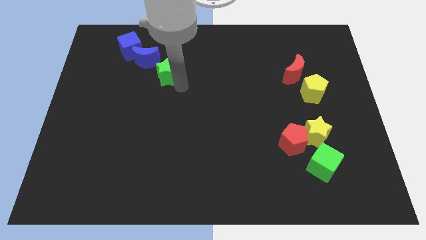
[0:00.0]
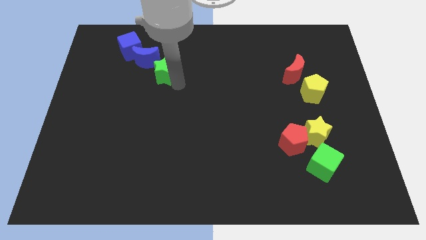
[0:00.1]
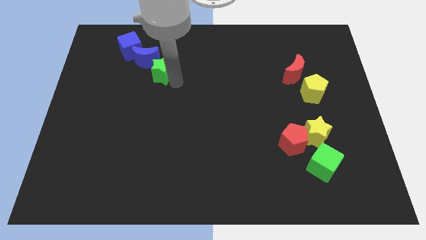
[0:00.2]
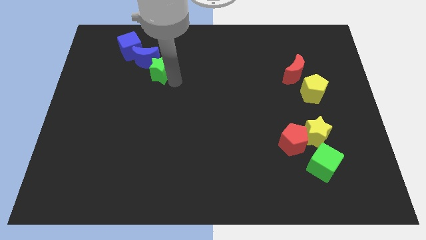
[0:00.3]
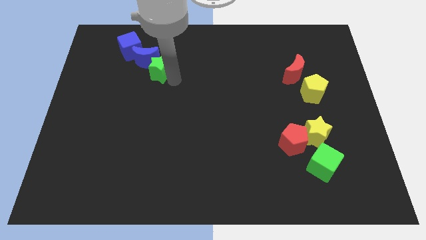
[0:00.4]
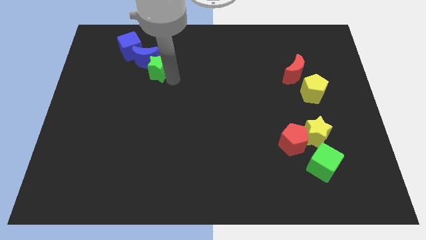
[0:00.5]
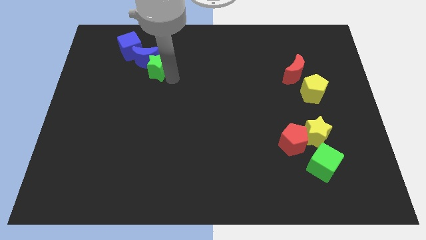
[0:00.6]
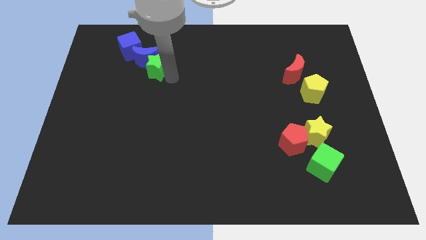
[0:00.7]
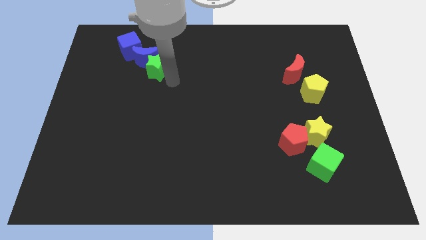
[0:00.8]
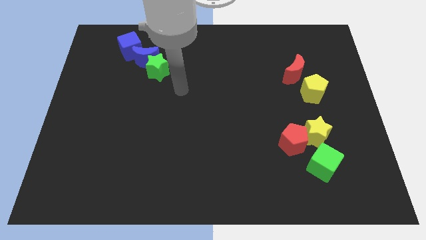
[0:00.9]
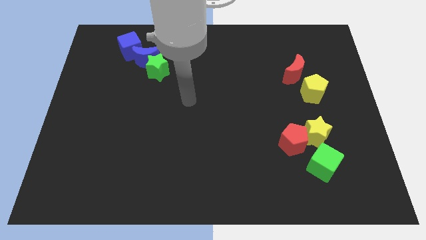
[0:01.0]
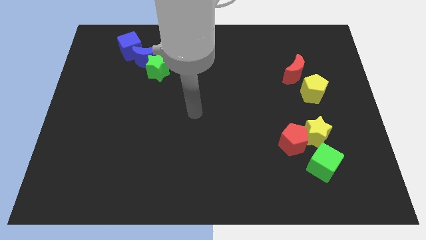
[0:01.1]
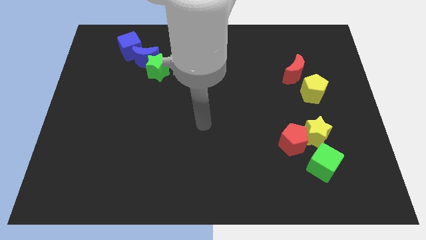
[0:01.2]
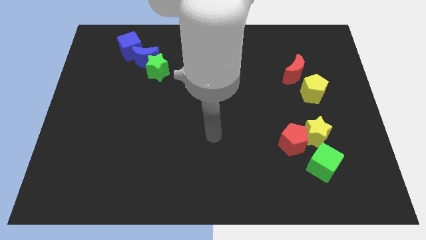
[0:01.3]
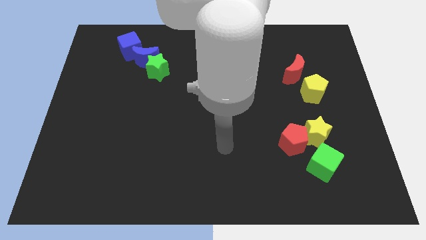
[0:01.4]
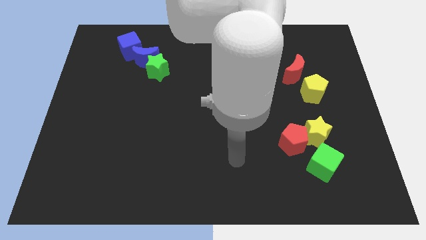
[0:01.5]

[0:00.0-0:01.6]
put green star into the blue moon

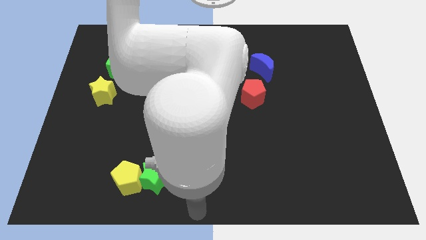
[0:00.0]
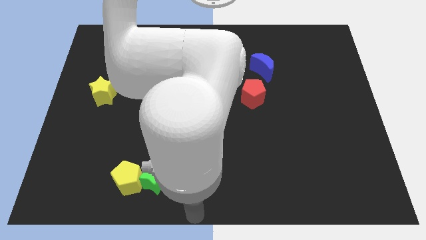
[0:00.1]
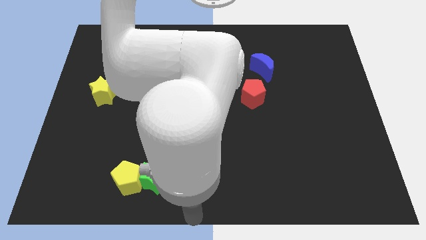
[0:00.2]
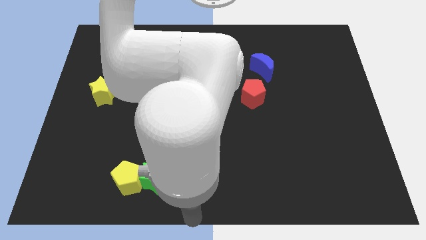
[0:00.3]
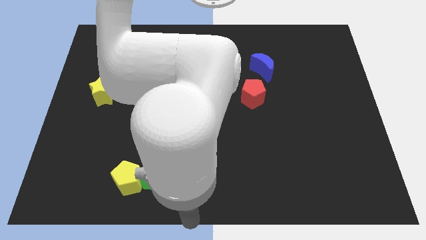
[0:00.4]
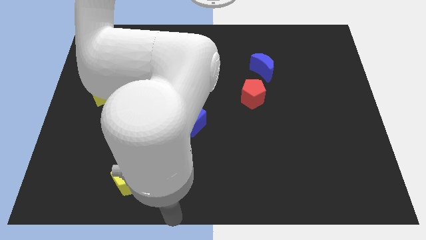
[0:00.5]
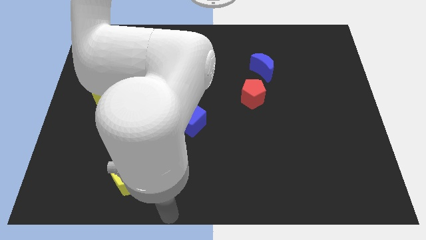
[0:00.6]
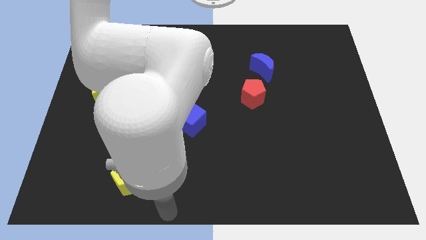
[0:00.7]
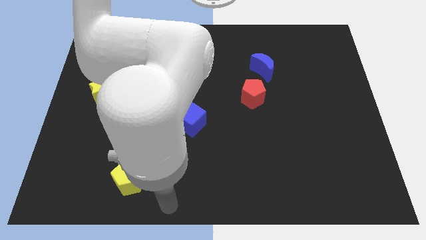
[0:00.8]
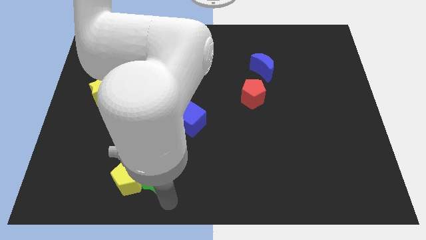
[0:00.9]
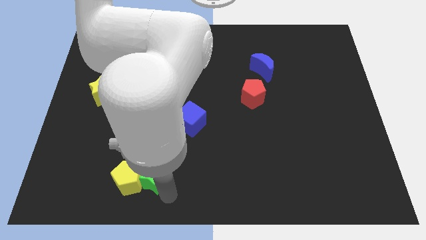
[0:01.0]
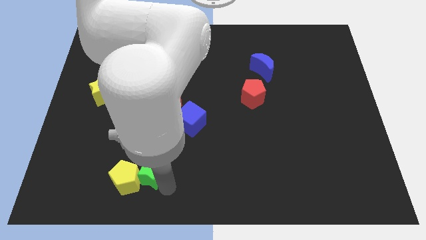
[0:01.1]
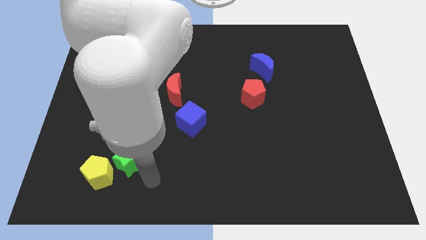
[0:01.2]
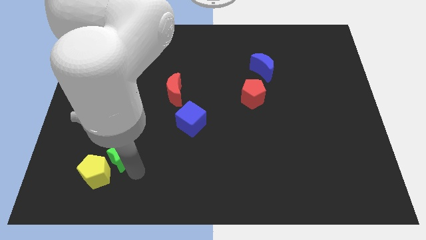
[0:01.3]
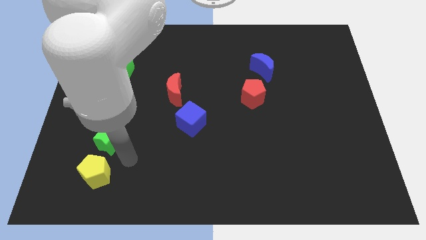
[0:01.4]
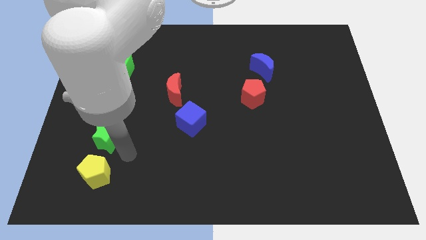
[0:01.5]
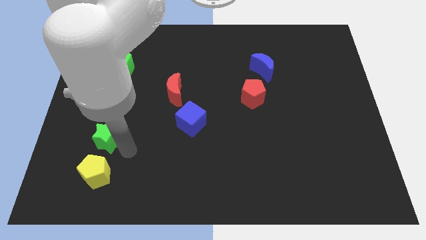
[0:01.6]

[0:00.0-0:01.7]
separate green star from the yellow pentagon

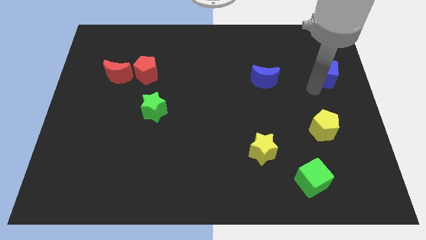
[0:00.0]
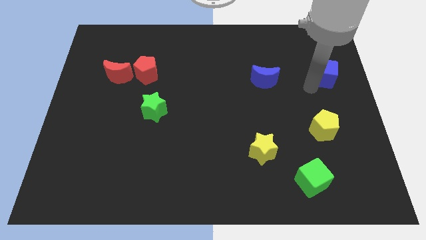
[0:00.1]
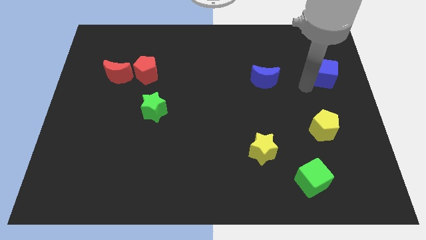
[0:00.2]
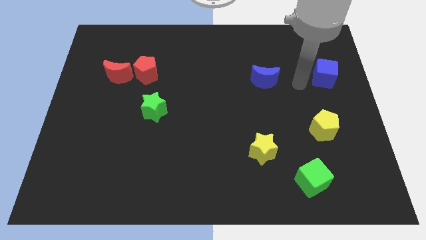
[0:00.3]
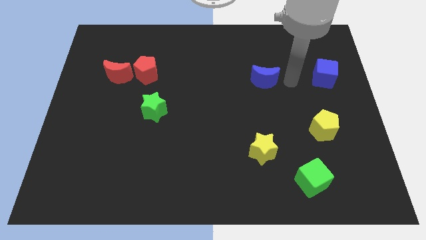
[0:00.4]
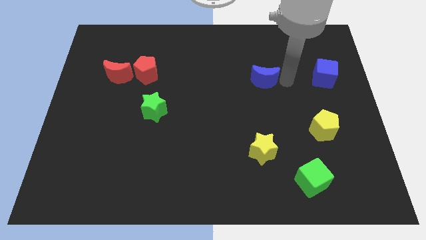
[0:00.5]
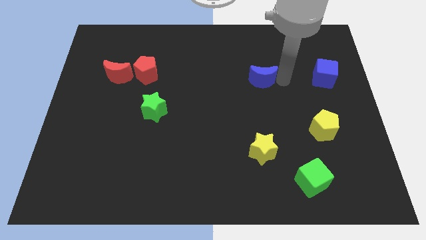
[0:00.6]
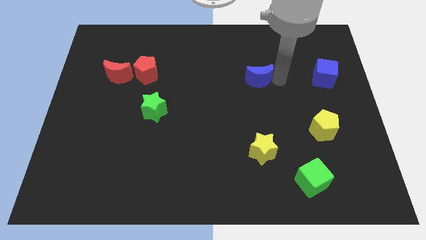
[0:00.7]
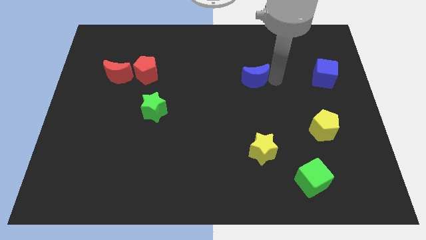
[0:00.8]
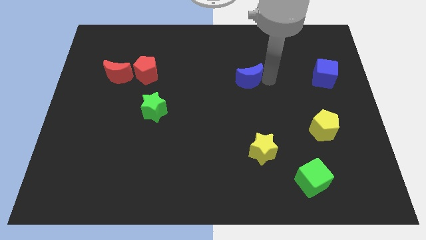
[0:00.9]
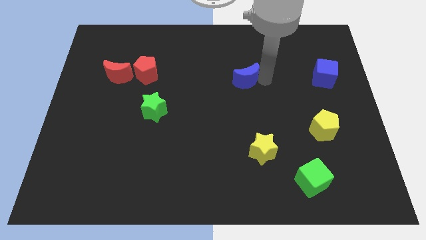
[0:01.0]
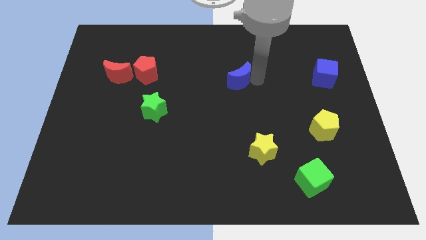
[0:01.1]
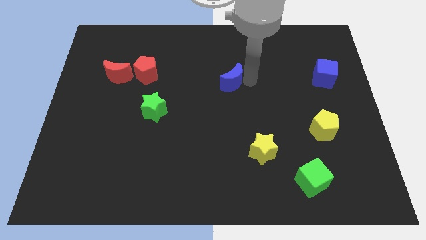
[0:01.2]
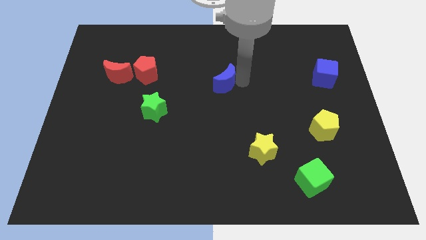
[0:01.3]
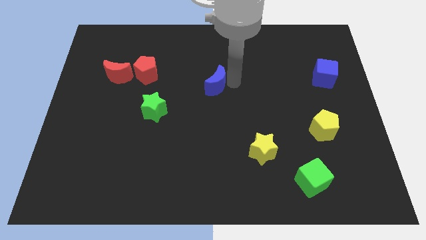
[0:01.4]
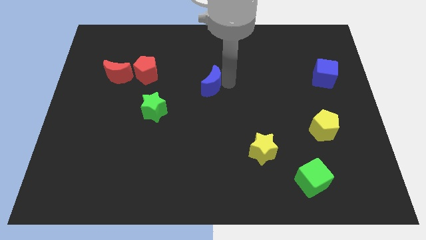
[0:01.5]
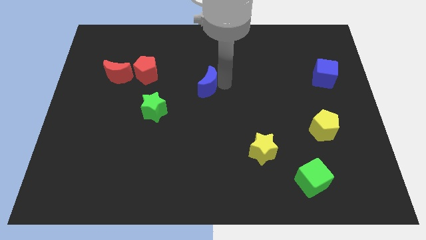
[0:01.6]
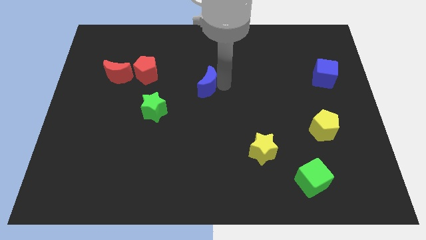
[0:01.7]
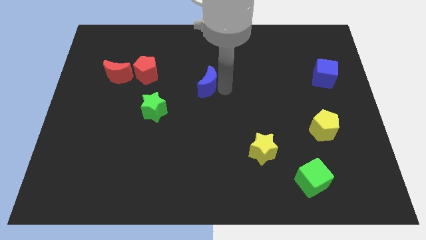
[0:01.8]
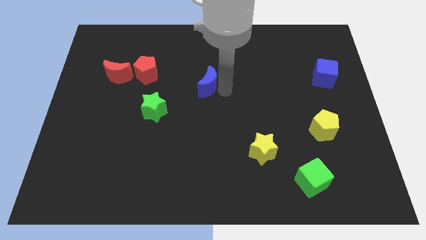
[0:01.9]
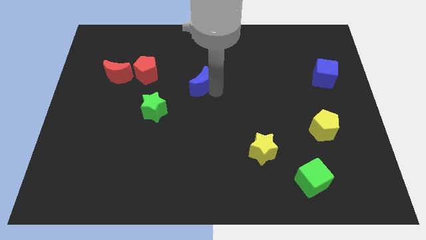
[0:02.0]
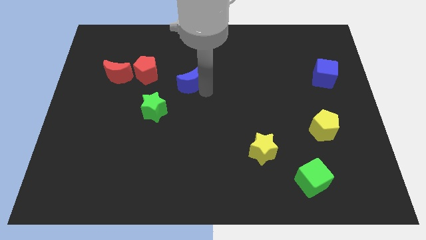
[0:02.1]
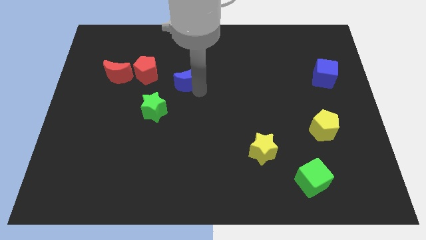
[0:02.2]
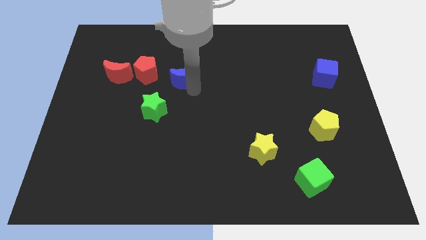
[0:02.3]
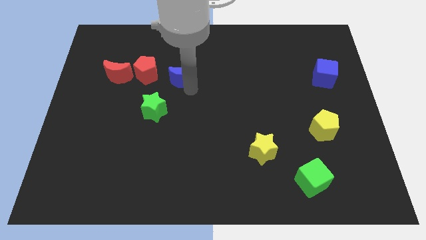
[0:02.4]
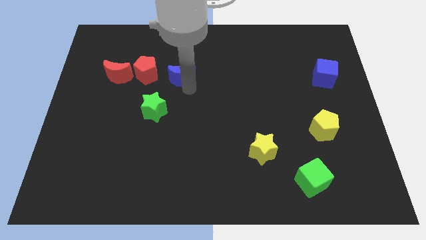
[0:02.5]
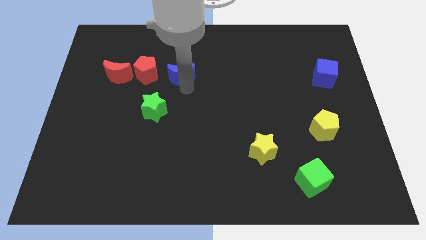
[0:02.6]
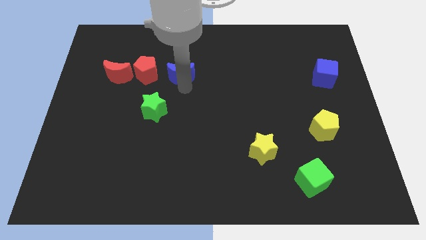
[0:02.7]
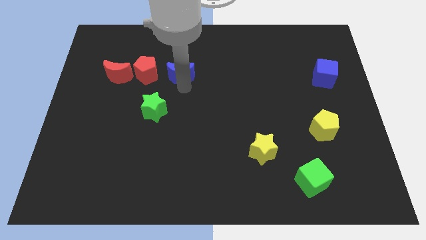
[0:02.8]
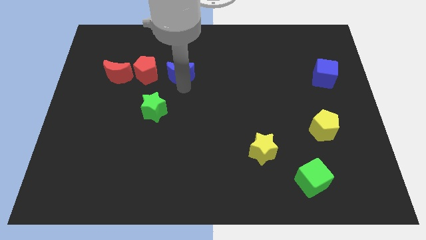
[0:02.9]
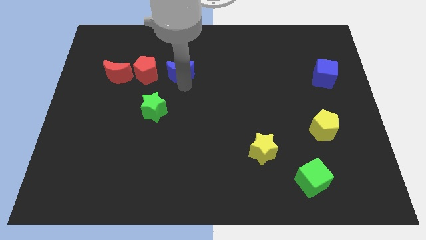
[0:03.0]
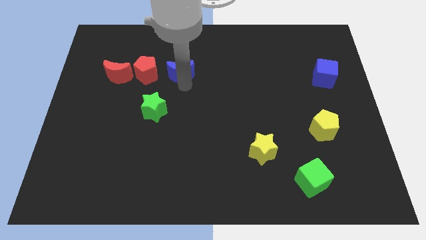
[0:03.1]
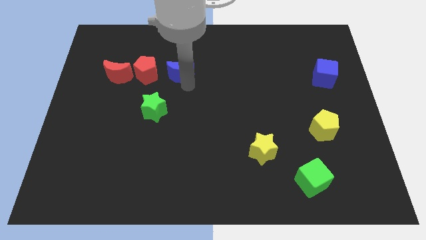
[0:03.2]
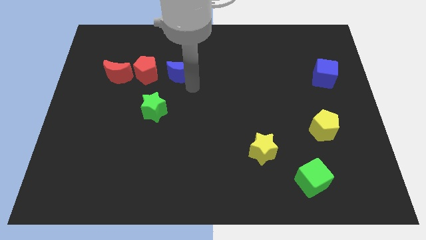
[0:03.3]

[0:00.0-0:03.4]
push the blue moon to the right of the red pentagon

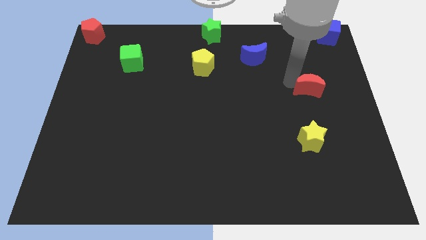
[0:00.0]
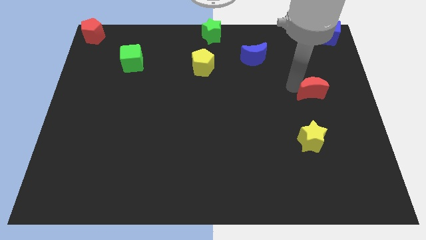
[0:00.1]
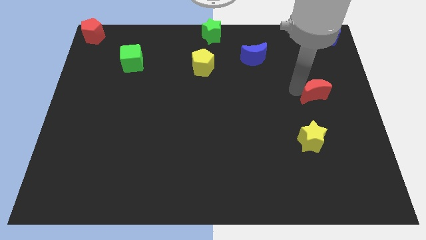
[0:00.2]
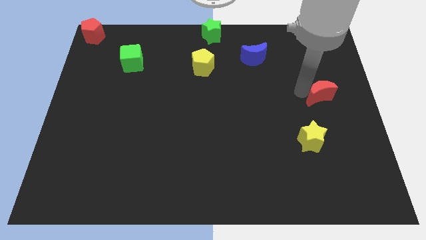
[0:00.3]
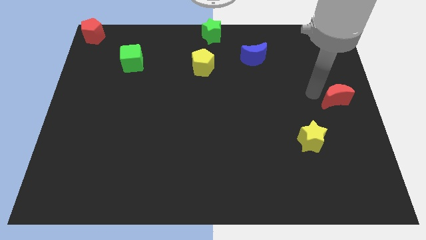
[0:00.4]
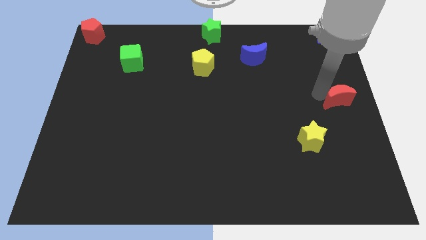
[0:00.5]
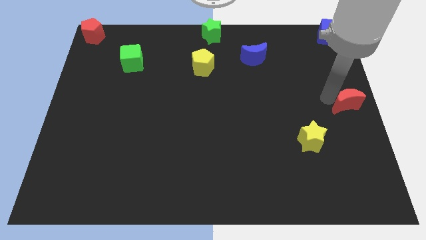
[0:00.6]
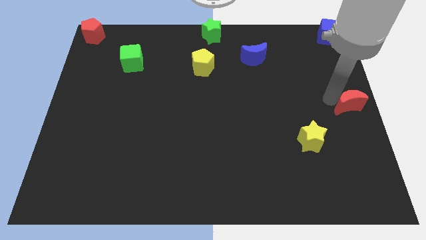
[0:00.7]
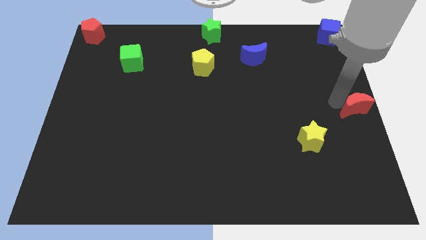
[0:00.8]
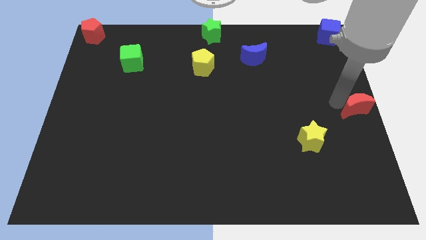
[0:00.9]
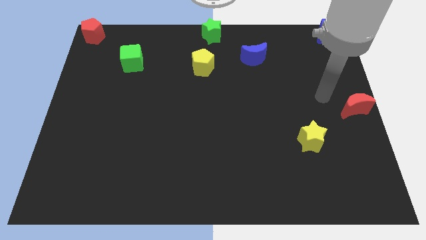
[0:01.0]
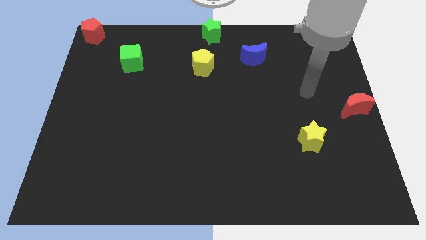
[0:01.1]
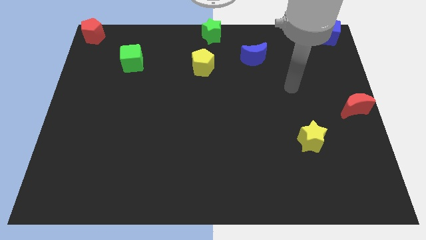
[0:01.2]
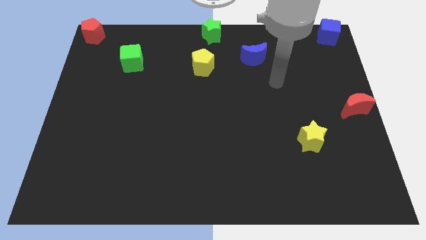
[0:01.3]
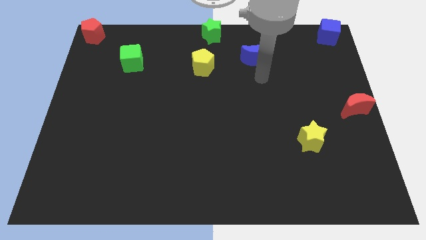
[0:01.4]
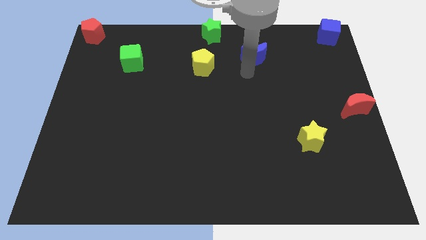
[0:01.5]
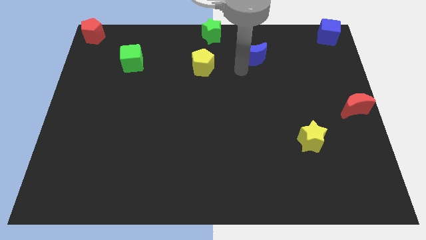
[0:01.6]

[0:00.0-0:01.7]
place the red crescent on the center right of the board

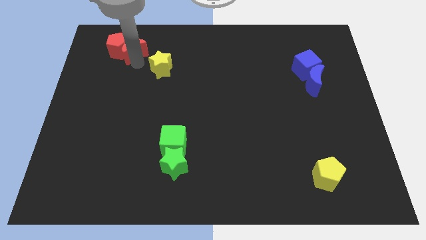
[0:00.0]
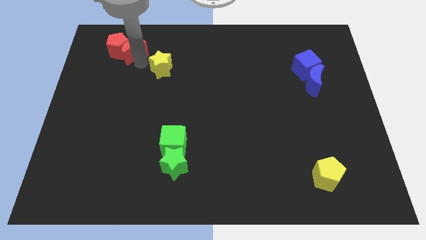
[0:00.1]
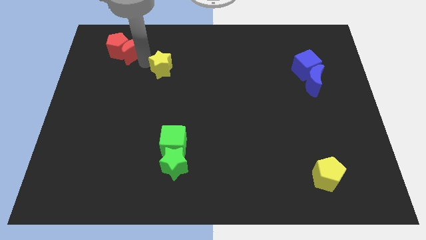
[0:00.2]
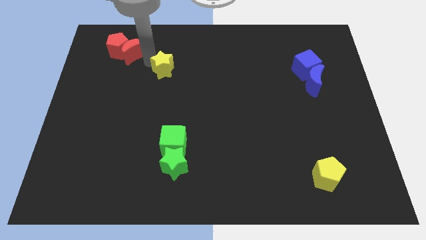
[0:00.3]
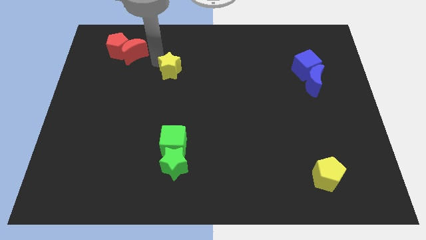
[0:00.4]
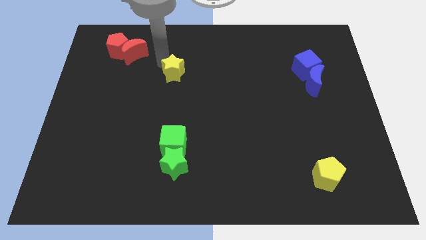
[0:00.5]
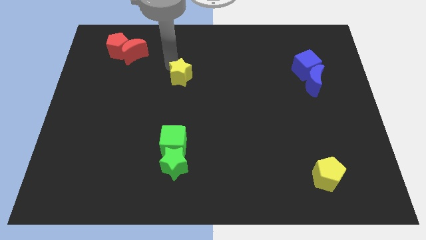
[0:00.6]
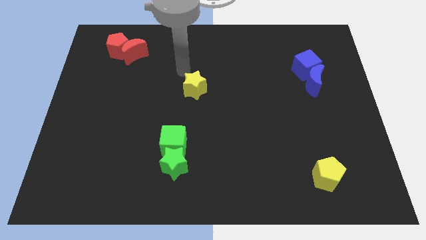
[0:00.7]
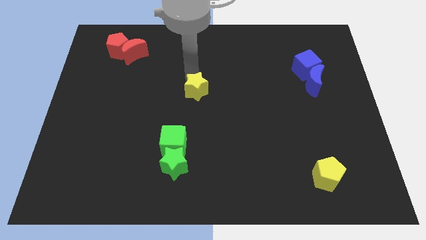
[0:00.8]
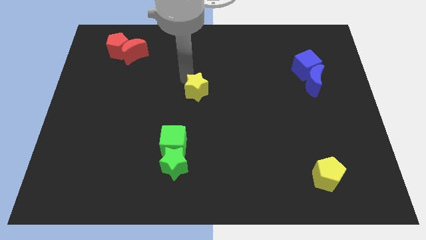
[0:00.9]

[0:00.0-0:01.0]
push the yellow star to the top right of the green cube
